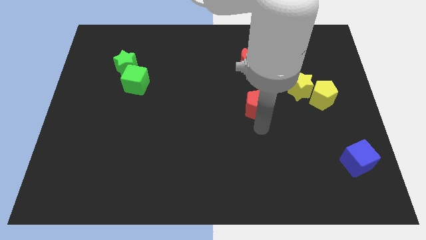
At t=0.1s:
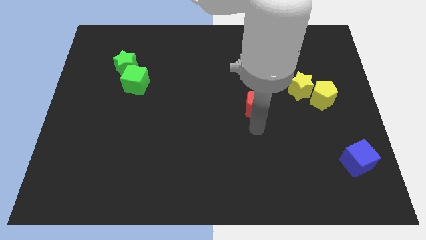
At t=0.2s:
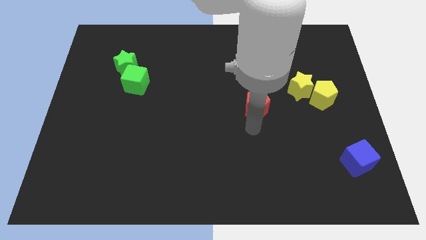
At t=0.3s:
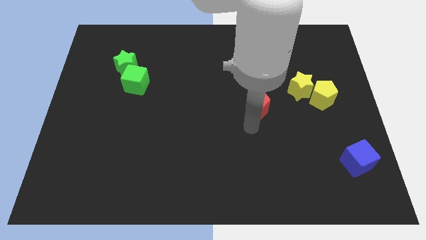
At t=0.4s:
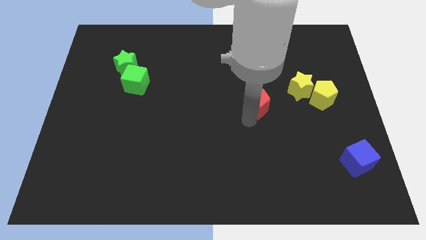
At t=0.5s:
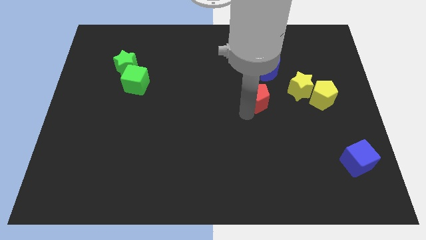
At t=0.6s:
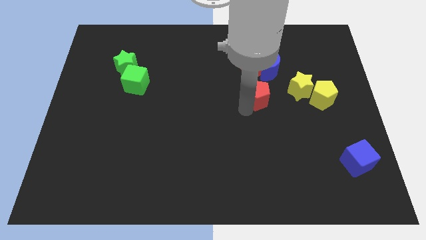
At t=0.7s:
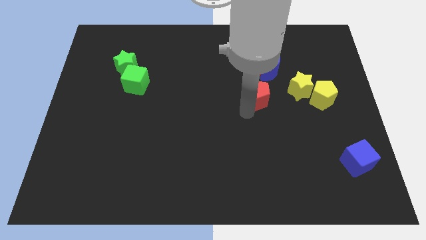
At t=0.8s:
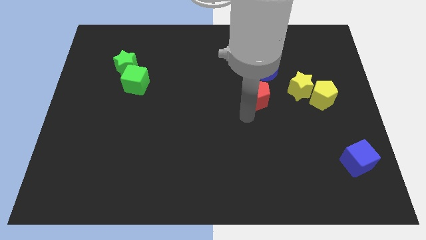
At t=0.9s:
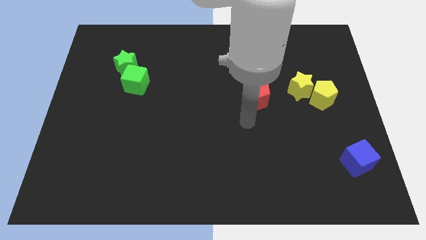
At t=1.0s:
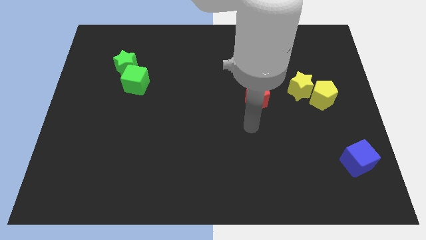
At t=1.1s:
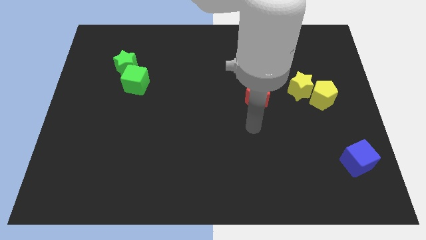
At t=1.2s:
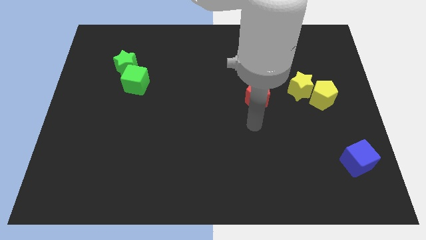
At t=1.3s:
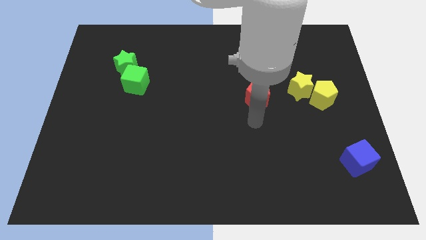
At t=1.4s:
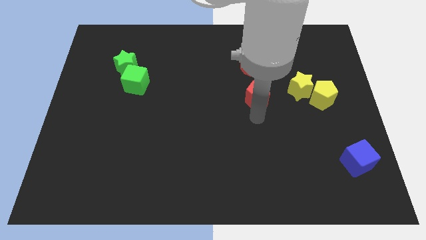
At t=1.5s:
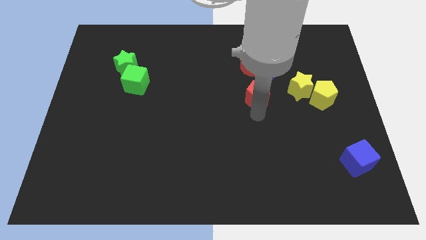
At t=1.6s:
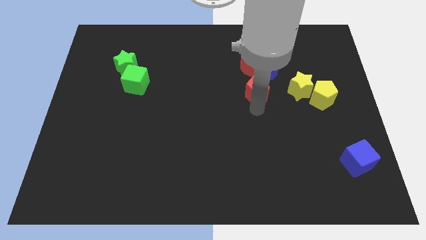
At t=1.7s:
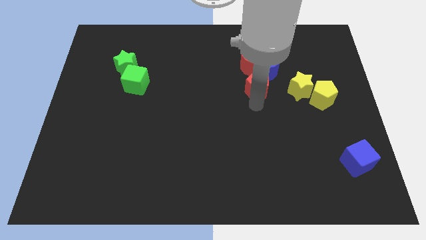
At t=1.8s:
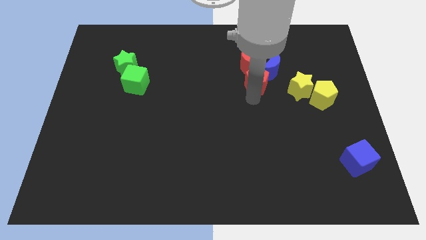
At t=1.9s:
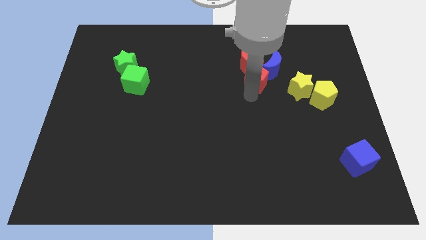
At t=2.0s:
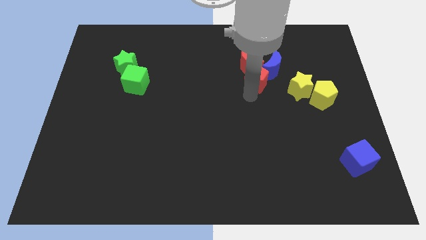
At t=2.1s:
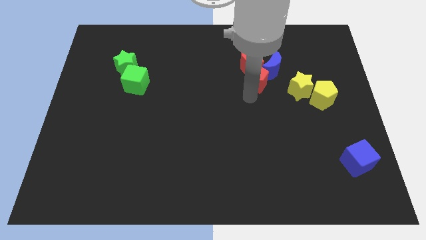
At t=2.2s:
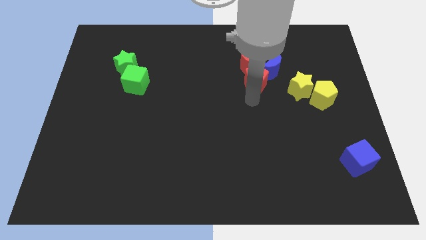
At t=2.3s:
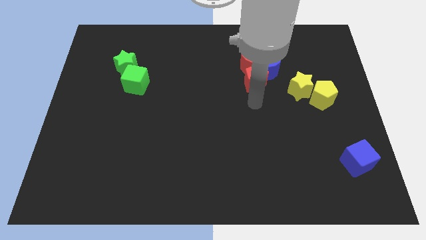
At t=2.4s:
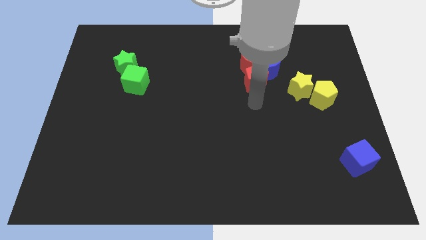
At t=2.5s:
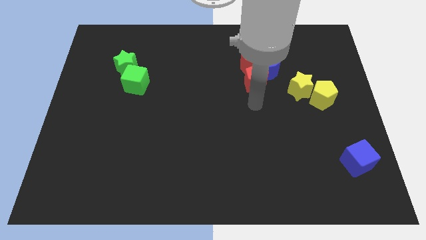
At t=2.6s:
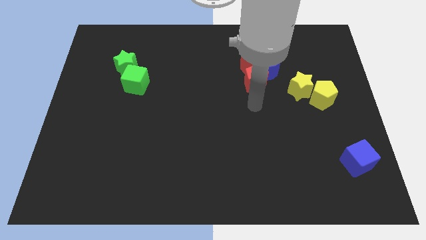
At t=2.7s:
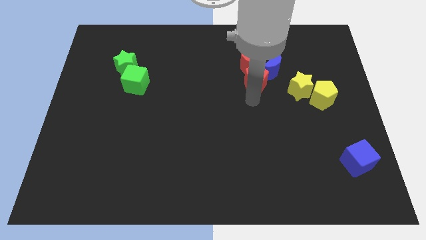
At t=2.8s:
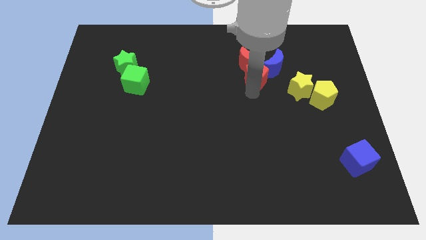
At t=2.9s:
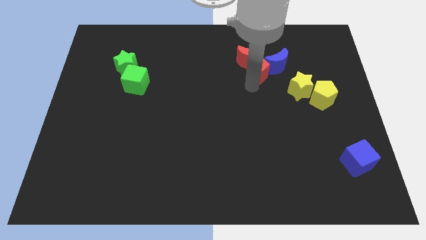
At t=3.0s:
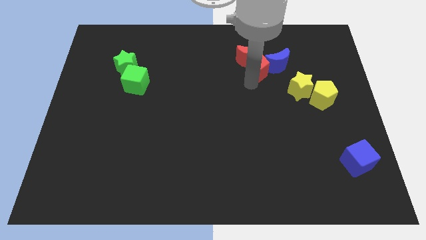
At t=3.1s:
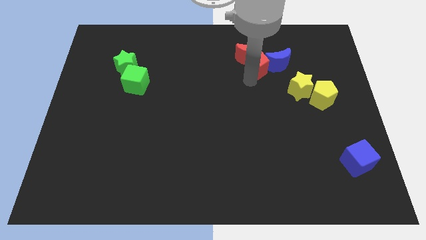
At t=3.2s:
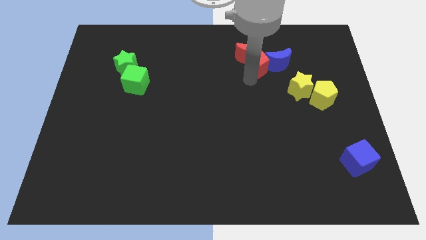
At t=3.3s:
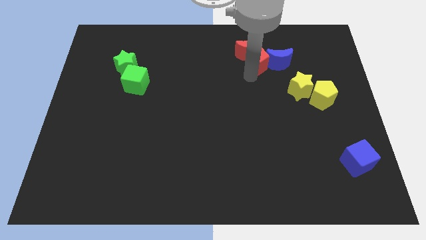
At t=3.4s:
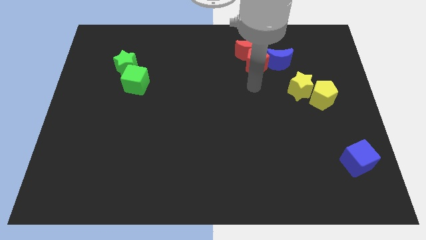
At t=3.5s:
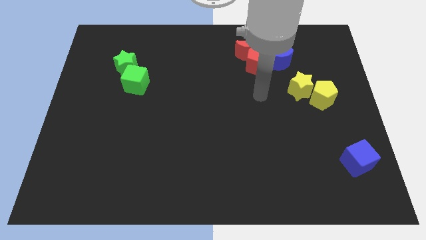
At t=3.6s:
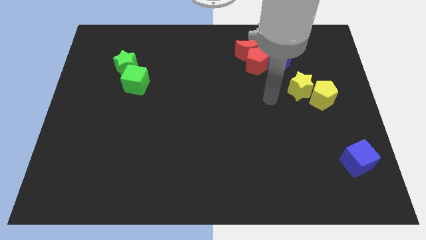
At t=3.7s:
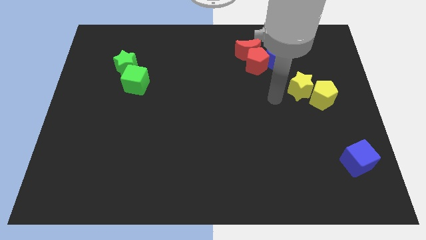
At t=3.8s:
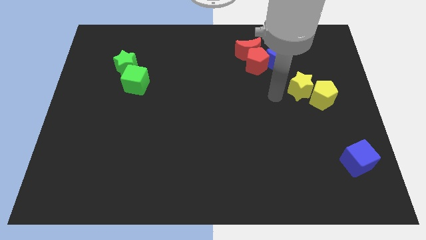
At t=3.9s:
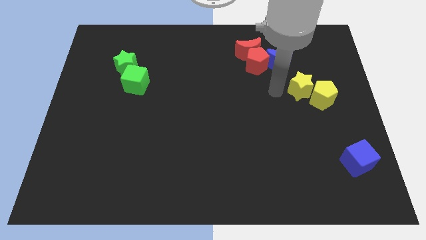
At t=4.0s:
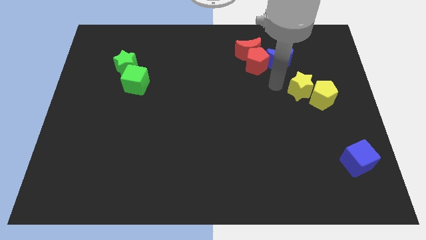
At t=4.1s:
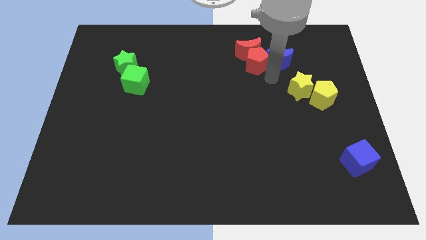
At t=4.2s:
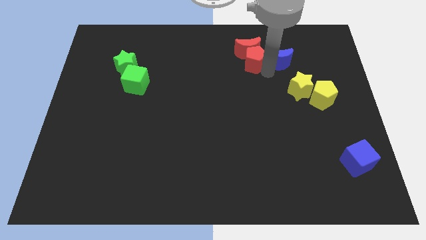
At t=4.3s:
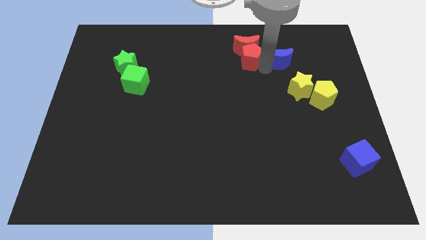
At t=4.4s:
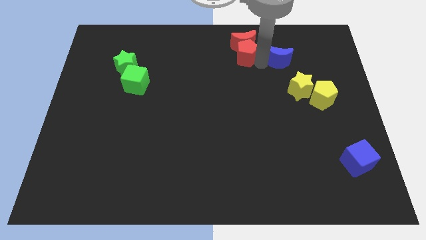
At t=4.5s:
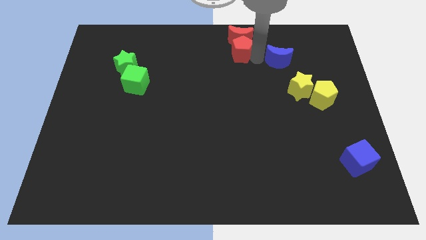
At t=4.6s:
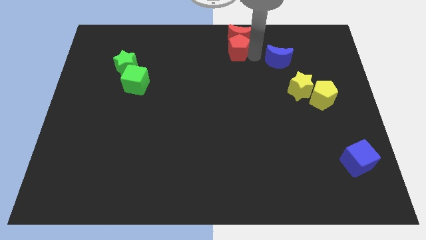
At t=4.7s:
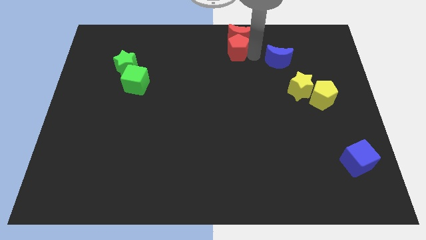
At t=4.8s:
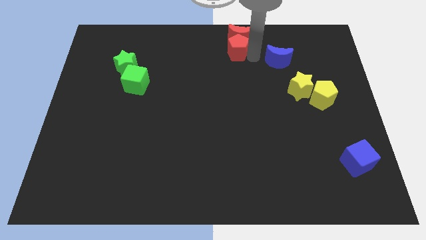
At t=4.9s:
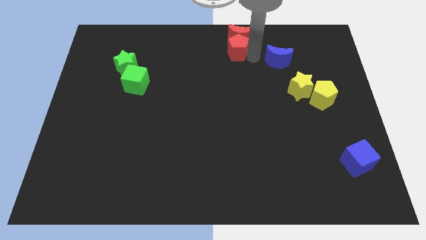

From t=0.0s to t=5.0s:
move the red pentagon and red crescent to the top center of the board

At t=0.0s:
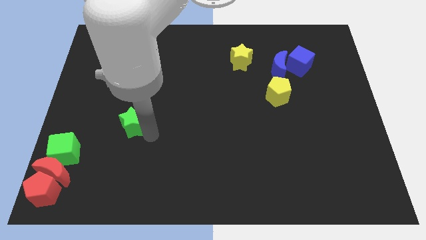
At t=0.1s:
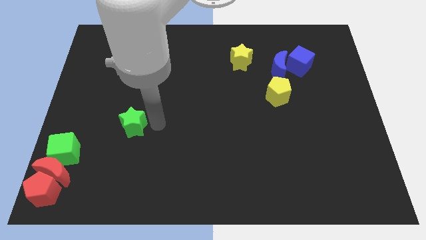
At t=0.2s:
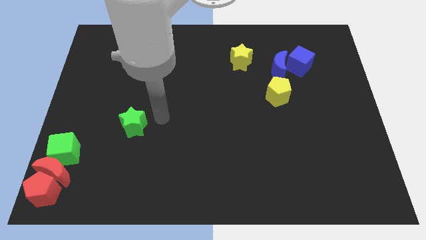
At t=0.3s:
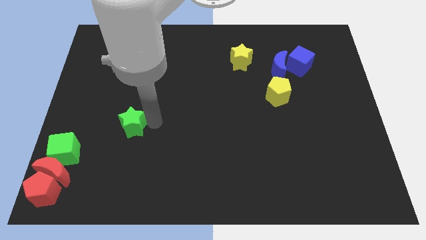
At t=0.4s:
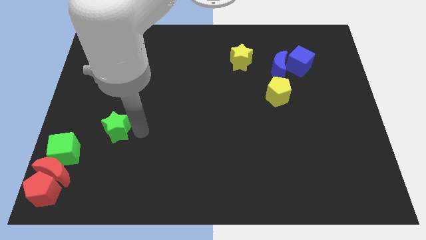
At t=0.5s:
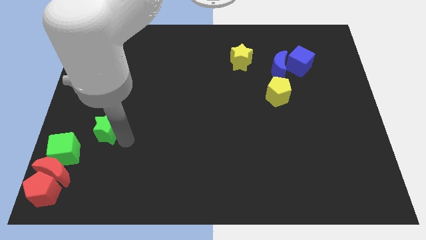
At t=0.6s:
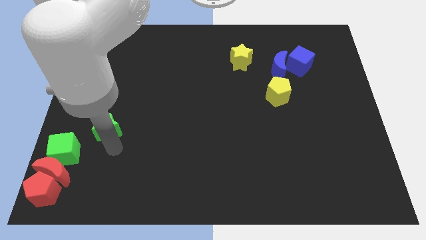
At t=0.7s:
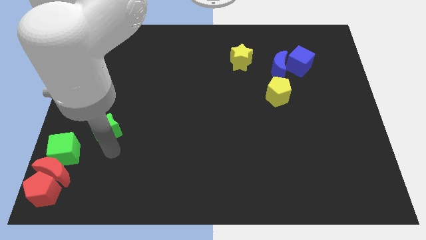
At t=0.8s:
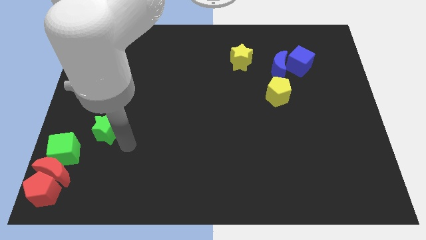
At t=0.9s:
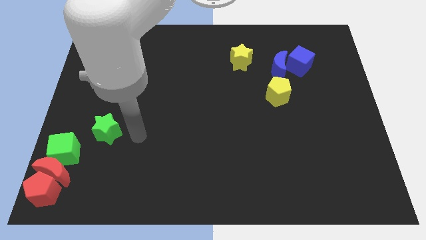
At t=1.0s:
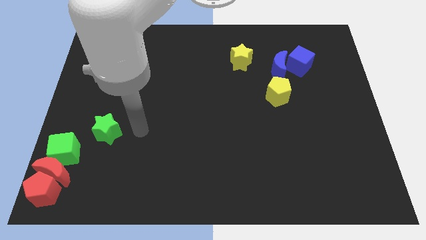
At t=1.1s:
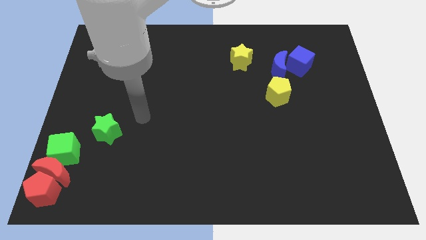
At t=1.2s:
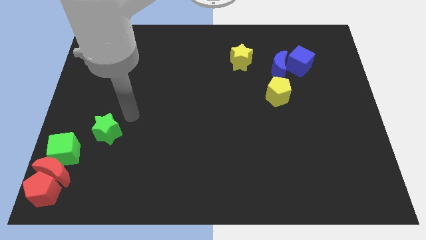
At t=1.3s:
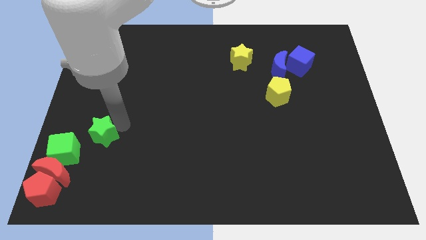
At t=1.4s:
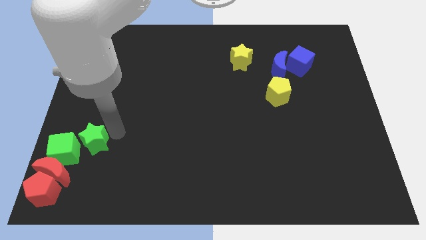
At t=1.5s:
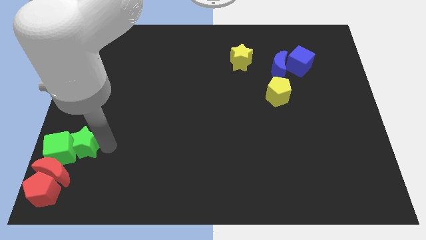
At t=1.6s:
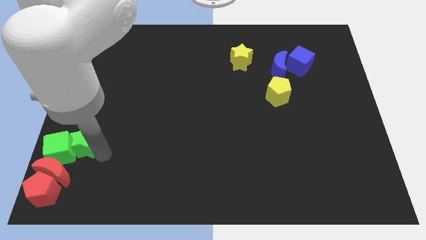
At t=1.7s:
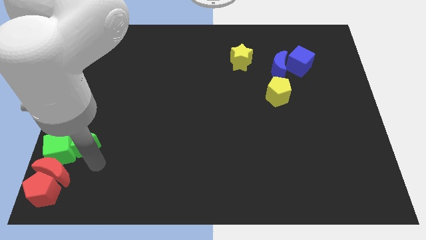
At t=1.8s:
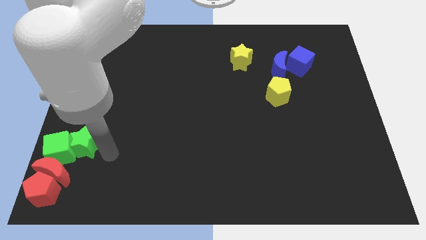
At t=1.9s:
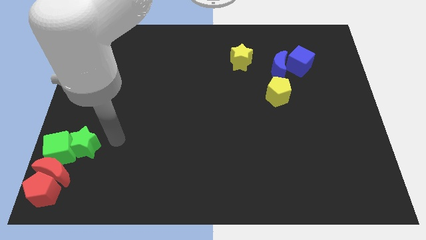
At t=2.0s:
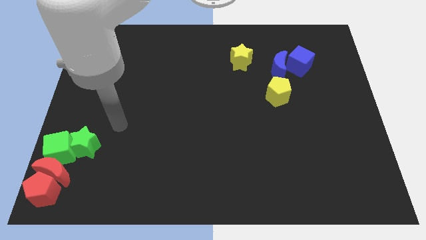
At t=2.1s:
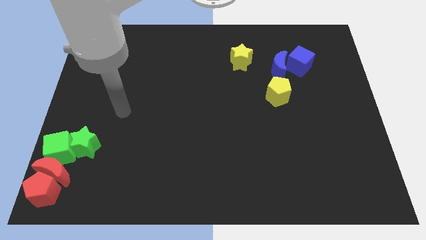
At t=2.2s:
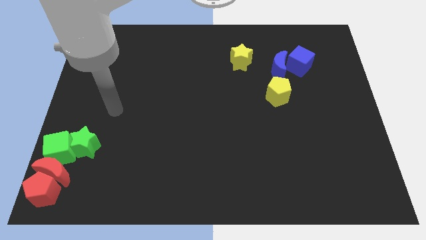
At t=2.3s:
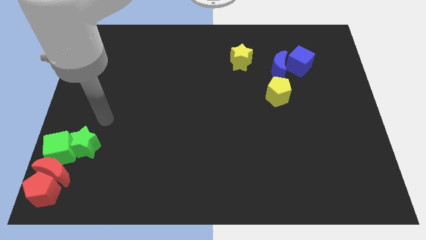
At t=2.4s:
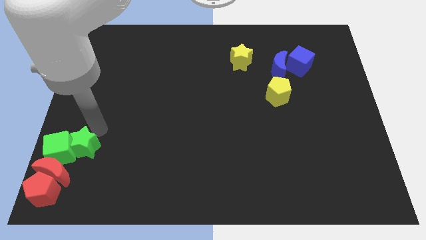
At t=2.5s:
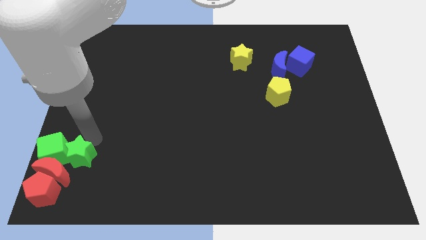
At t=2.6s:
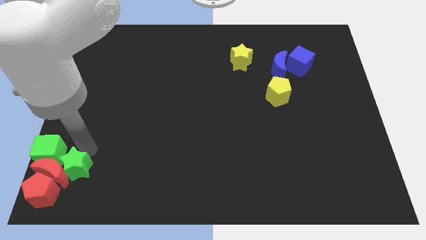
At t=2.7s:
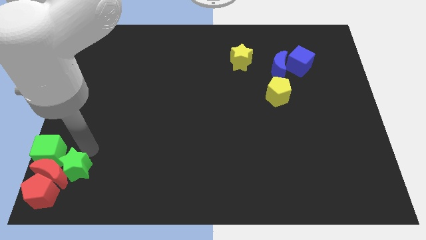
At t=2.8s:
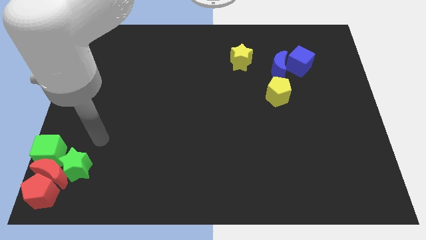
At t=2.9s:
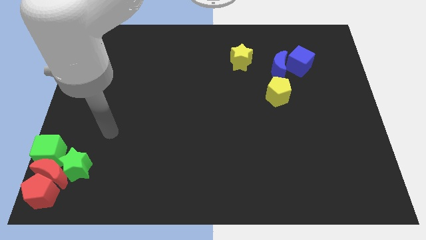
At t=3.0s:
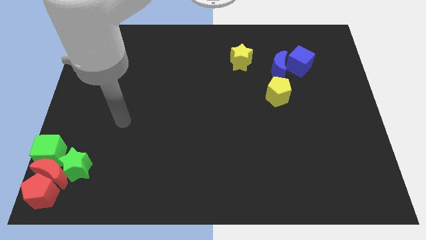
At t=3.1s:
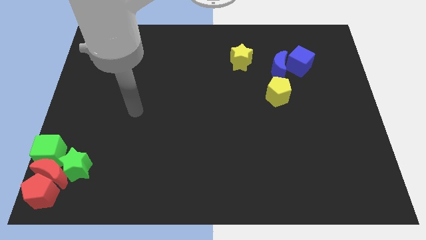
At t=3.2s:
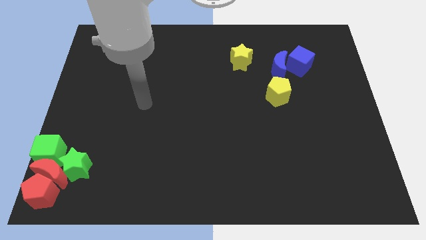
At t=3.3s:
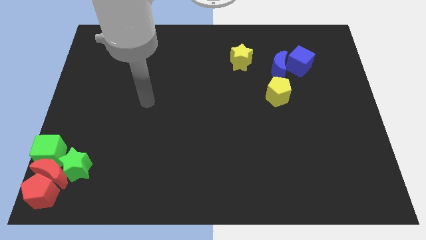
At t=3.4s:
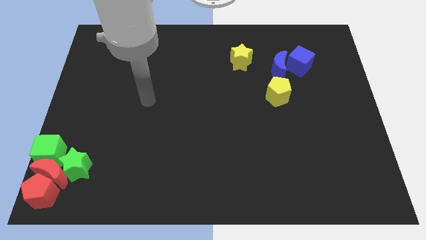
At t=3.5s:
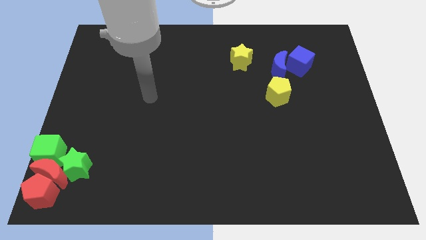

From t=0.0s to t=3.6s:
slide the green star into the group of blocks

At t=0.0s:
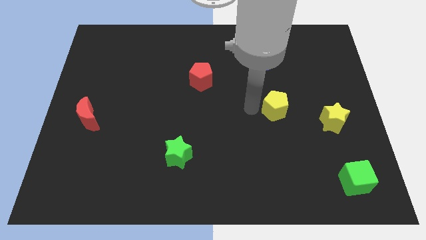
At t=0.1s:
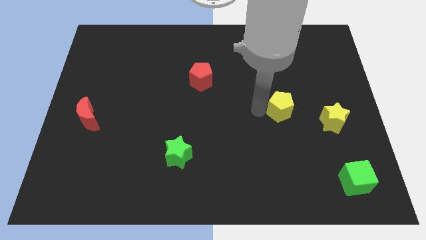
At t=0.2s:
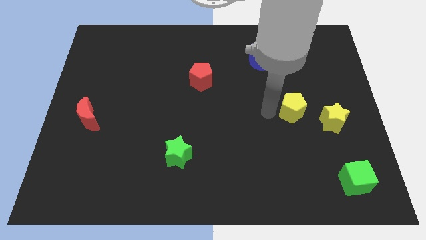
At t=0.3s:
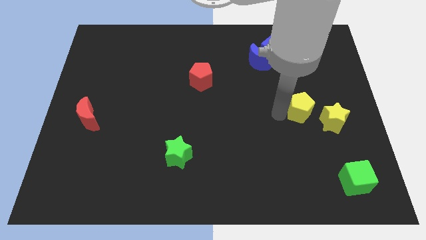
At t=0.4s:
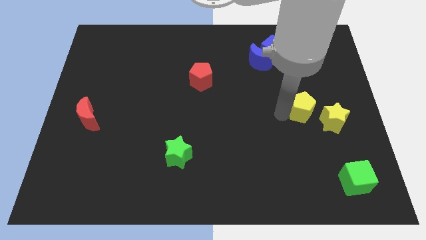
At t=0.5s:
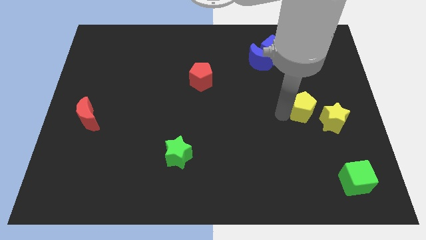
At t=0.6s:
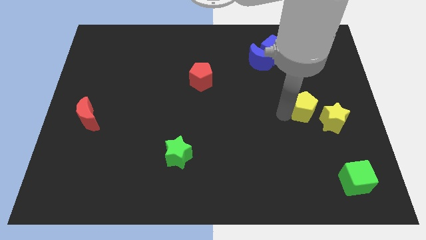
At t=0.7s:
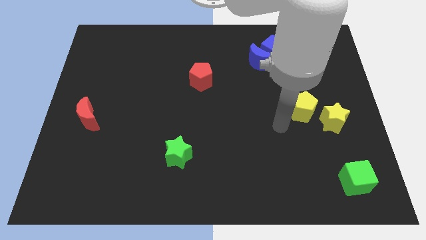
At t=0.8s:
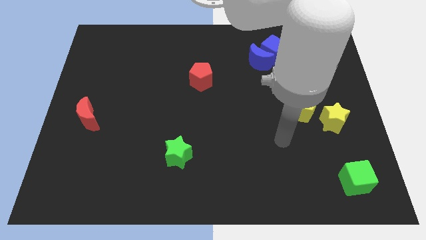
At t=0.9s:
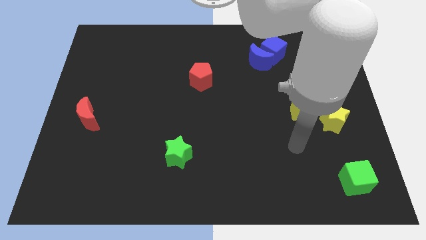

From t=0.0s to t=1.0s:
push the yellow pentagon towards the diagonal top left corner of the yellow star
